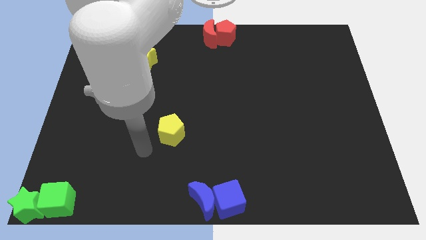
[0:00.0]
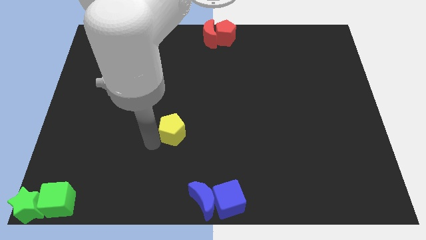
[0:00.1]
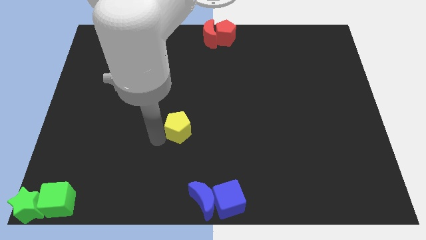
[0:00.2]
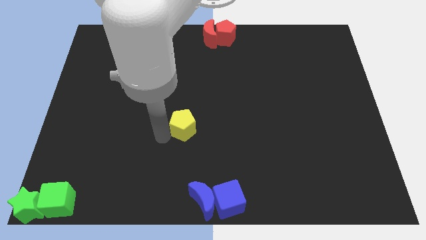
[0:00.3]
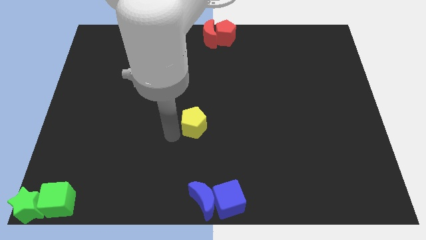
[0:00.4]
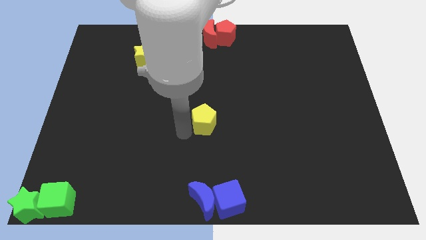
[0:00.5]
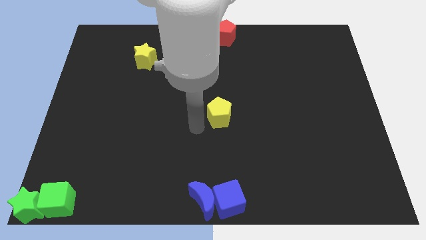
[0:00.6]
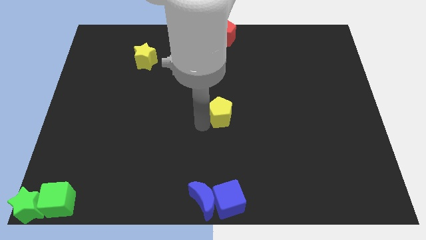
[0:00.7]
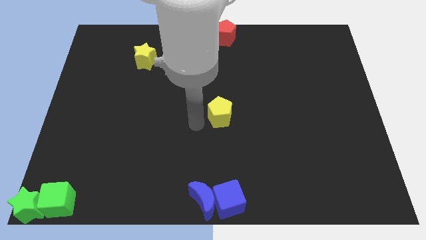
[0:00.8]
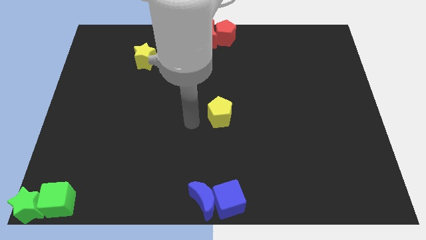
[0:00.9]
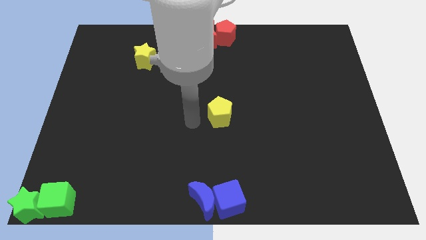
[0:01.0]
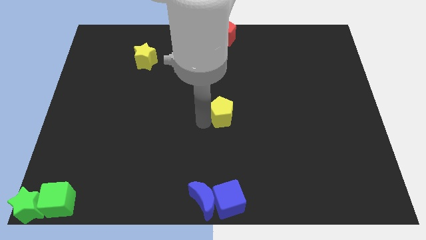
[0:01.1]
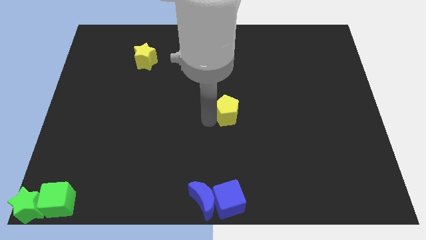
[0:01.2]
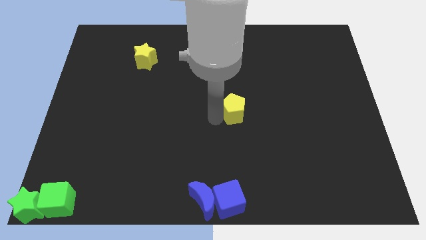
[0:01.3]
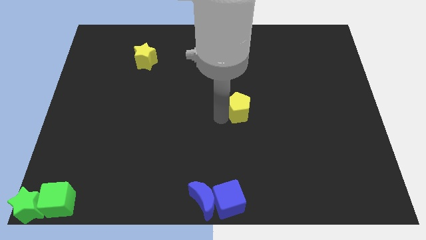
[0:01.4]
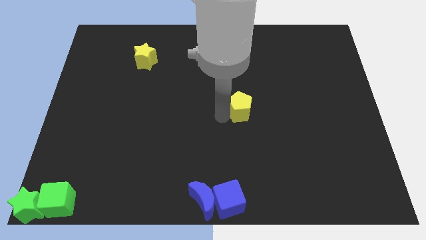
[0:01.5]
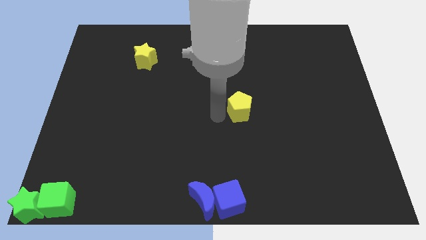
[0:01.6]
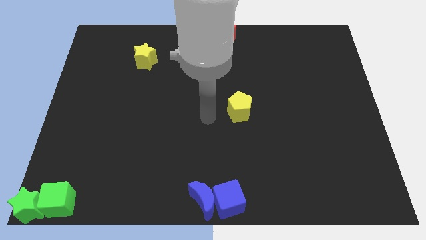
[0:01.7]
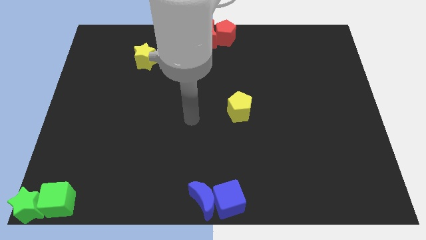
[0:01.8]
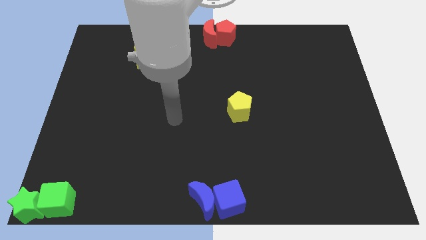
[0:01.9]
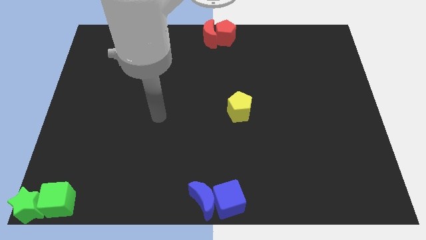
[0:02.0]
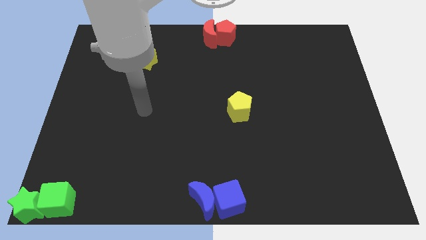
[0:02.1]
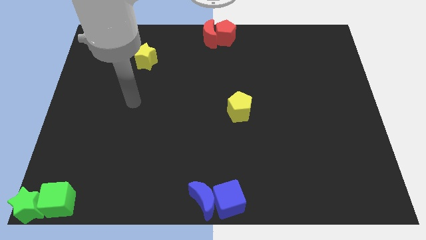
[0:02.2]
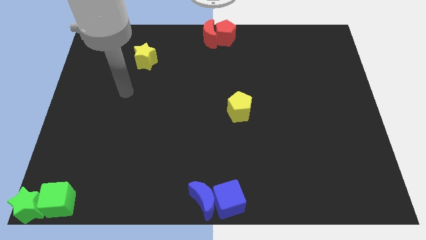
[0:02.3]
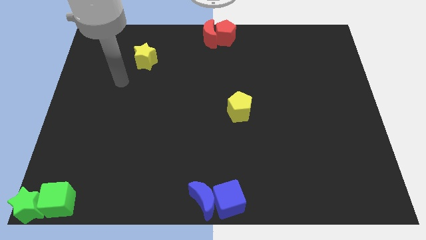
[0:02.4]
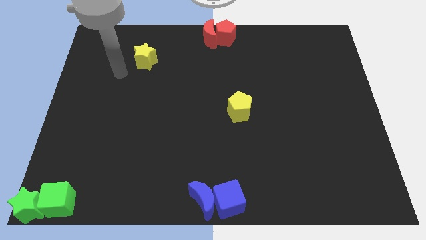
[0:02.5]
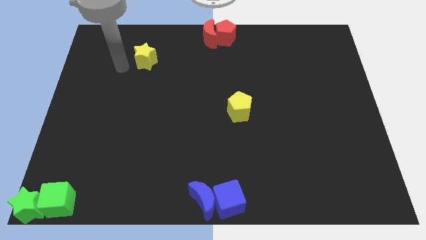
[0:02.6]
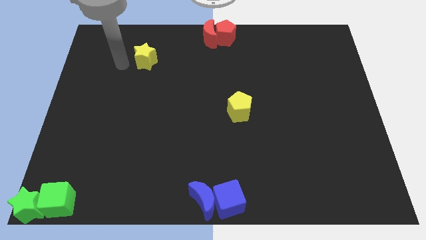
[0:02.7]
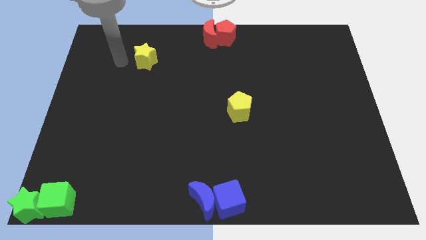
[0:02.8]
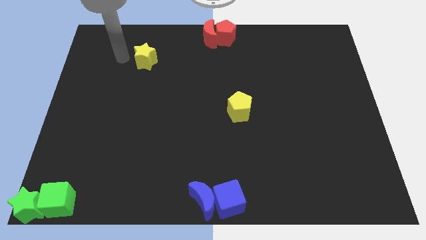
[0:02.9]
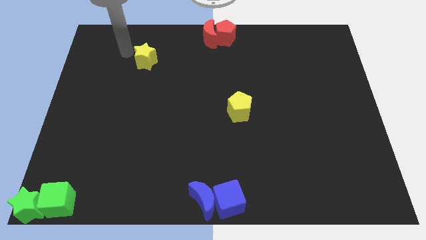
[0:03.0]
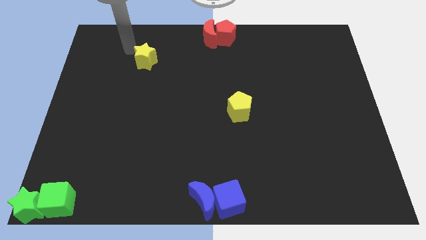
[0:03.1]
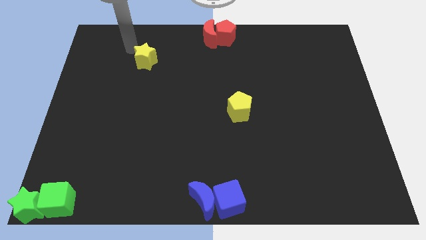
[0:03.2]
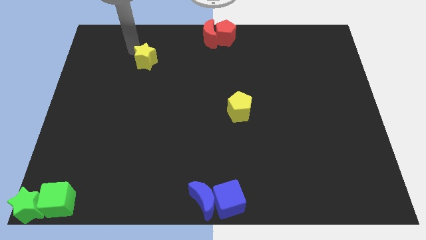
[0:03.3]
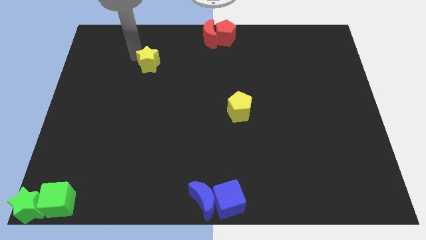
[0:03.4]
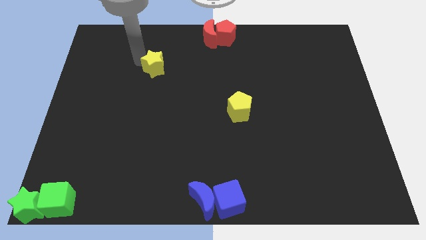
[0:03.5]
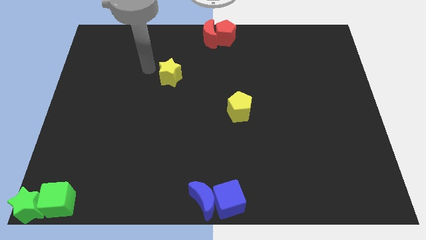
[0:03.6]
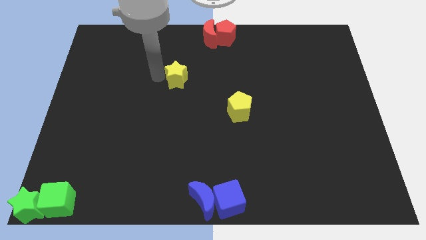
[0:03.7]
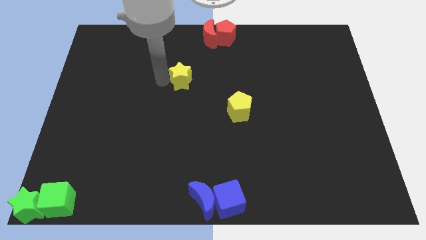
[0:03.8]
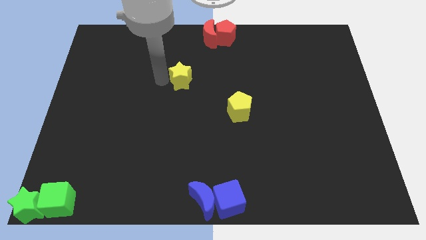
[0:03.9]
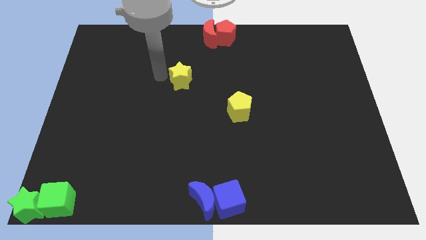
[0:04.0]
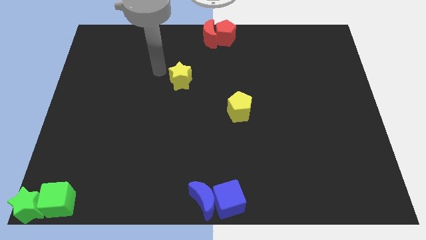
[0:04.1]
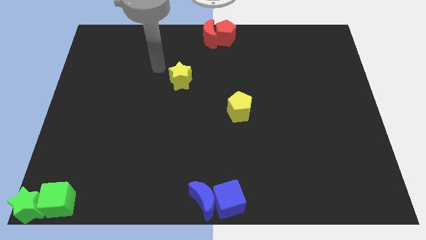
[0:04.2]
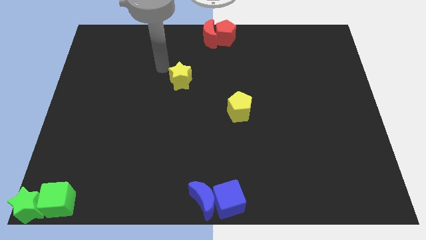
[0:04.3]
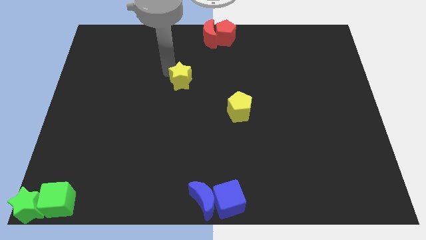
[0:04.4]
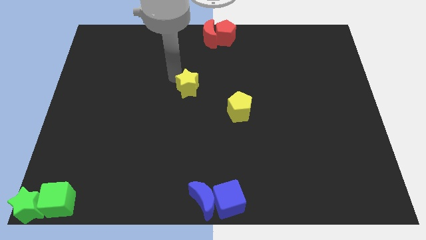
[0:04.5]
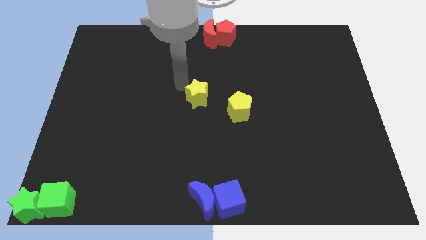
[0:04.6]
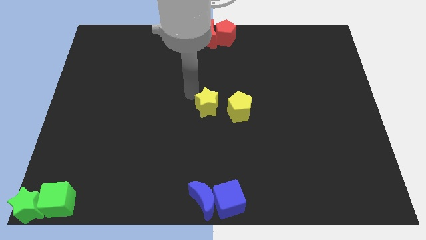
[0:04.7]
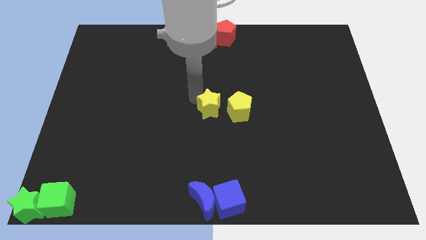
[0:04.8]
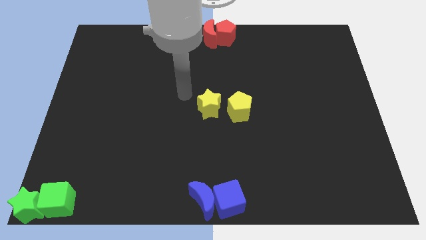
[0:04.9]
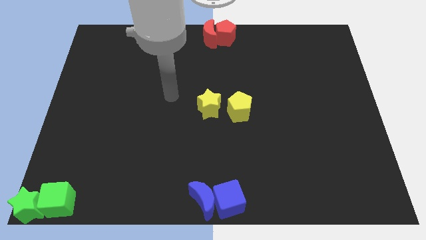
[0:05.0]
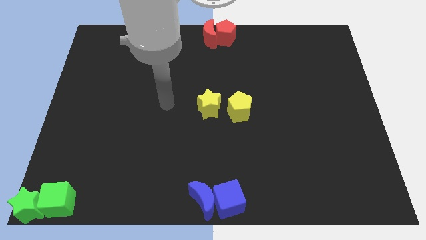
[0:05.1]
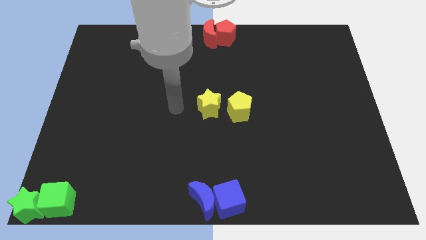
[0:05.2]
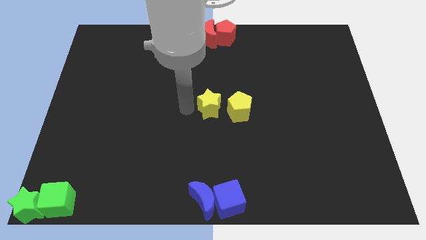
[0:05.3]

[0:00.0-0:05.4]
move the yellow star to the left of the yellow pentagon

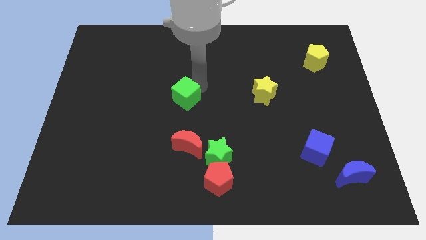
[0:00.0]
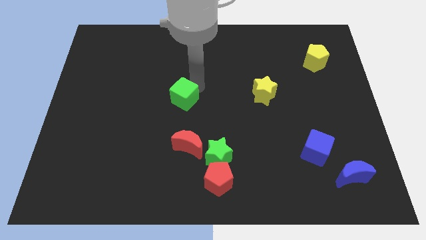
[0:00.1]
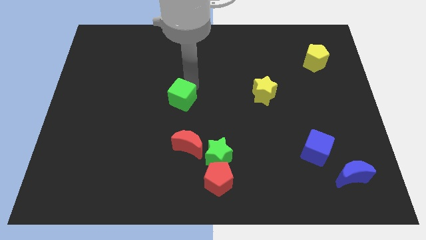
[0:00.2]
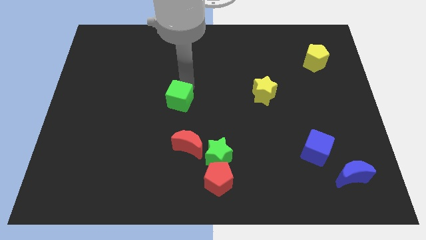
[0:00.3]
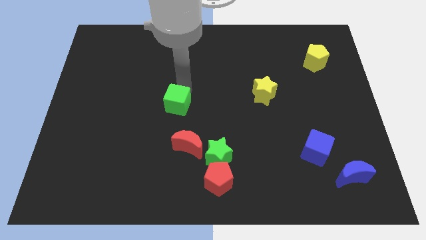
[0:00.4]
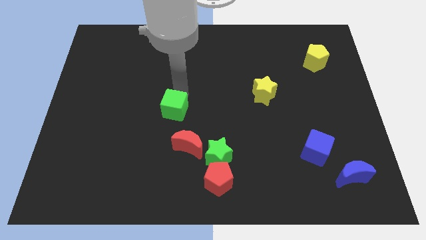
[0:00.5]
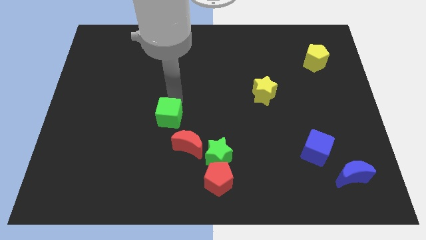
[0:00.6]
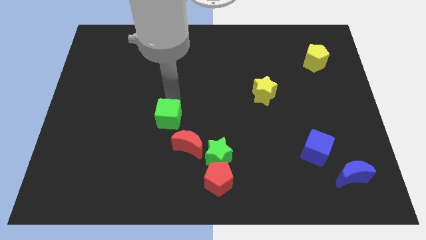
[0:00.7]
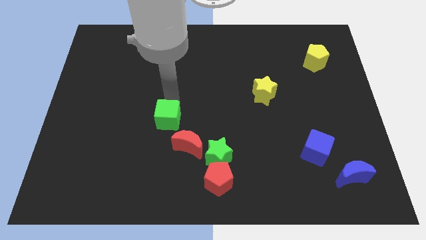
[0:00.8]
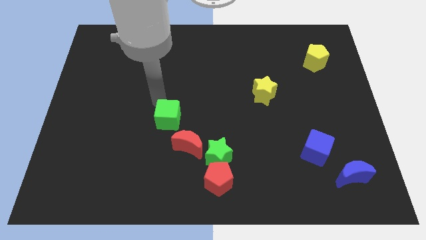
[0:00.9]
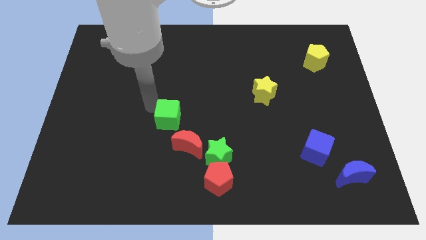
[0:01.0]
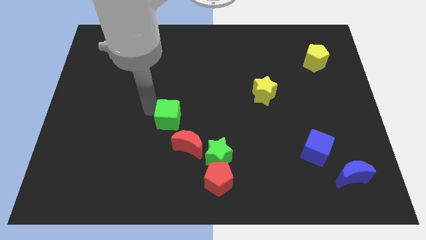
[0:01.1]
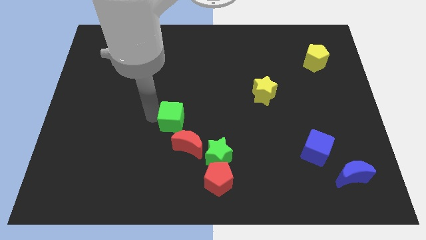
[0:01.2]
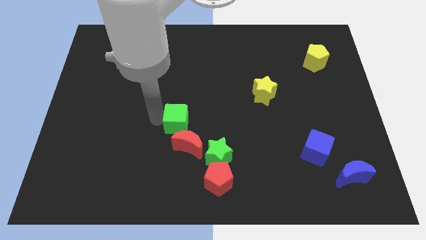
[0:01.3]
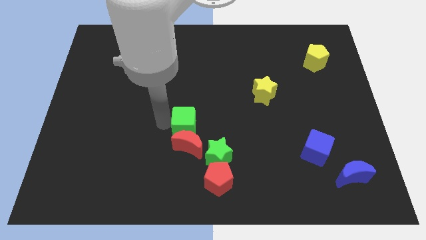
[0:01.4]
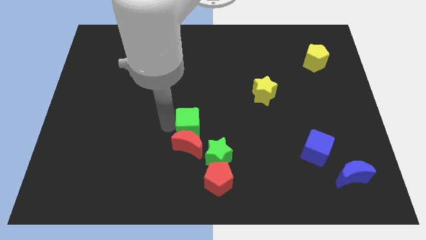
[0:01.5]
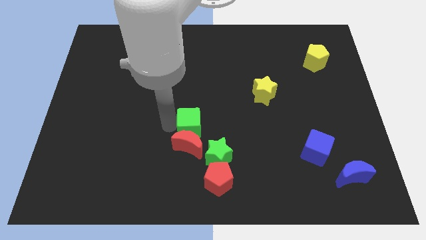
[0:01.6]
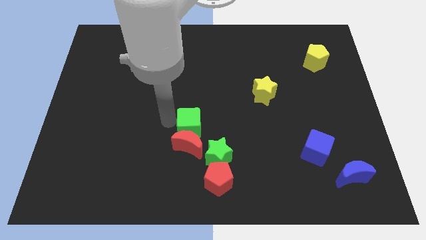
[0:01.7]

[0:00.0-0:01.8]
move the green cube to the top of red crescent

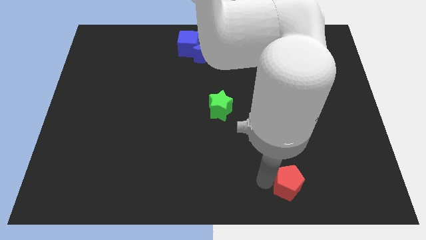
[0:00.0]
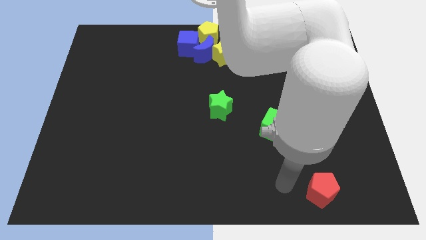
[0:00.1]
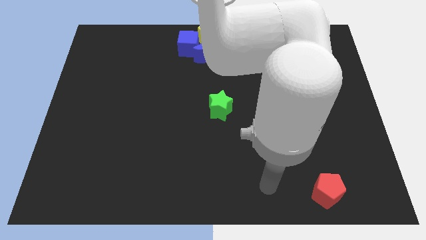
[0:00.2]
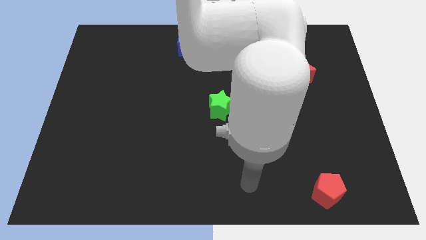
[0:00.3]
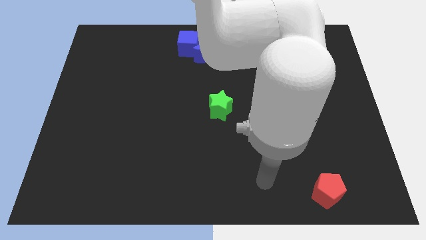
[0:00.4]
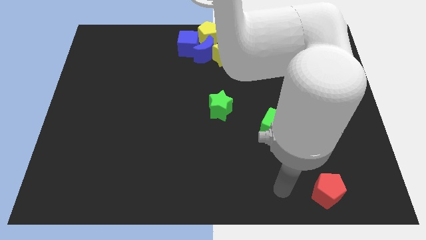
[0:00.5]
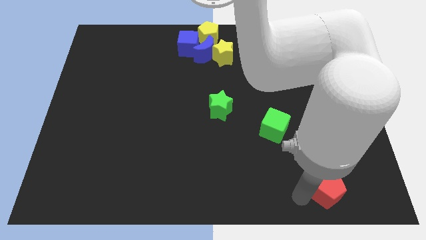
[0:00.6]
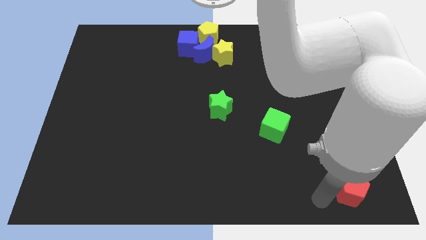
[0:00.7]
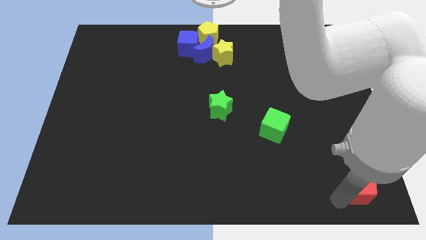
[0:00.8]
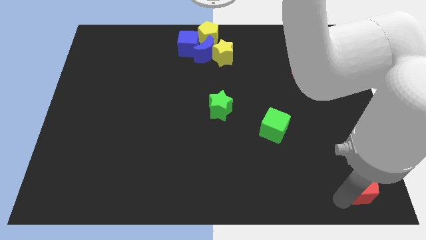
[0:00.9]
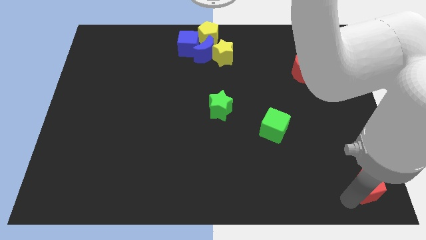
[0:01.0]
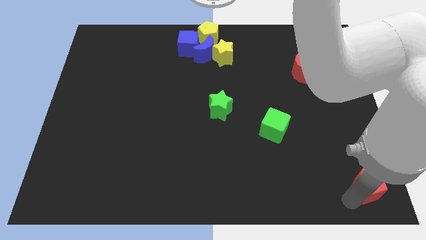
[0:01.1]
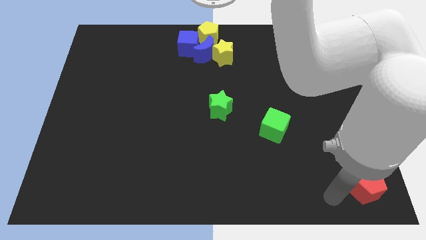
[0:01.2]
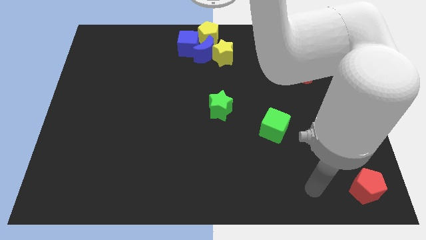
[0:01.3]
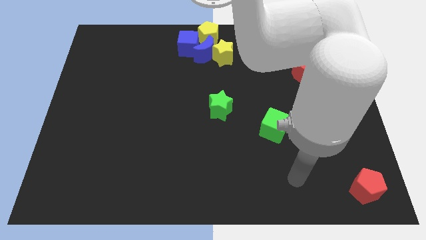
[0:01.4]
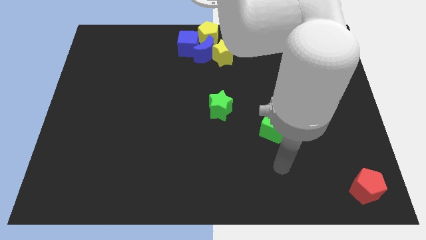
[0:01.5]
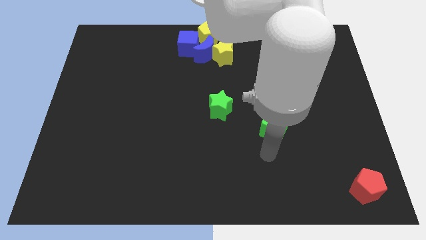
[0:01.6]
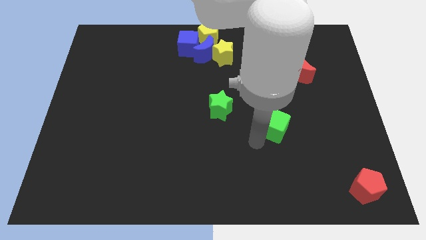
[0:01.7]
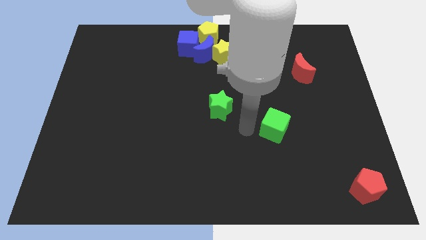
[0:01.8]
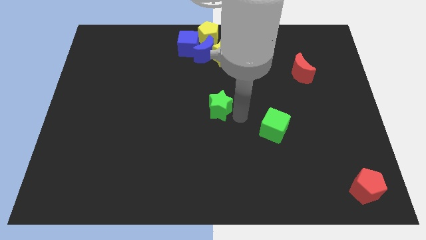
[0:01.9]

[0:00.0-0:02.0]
place the red pentagon towards the bottom right corner of the board
